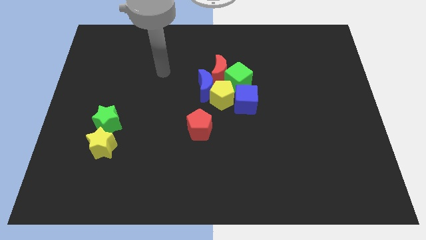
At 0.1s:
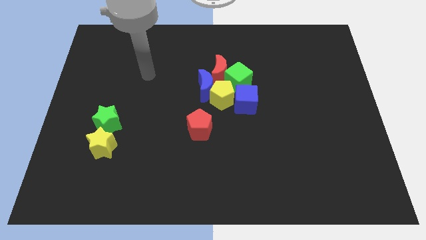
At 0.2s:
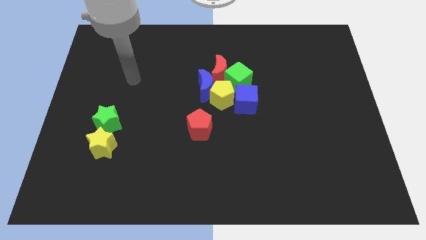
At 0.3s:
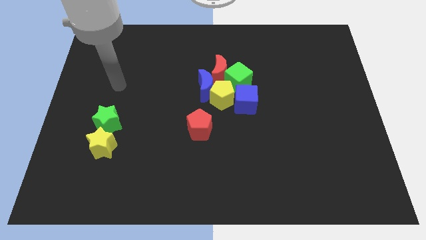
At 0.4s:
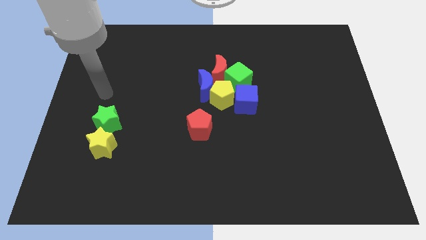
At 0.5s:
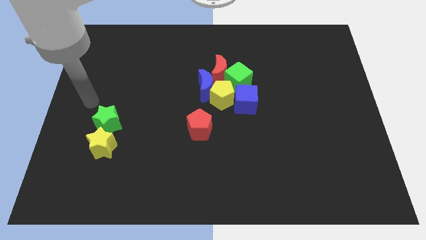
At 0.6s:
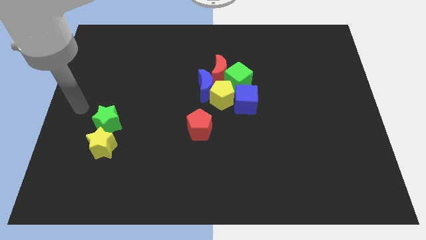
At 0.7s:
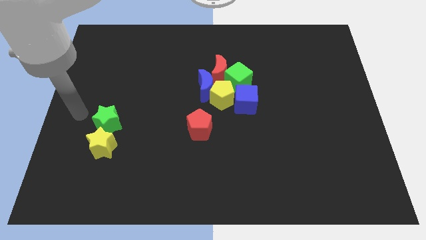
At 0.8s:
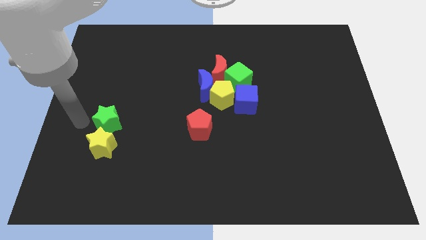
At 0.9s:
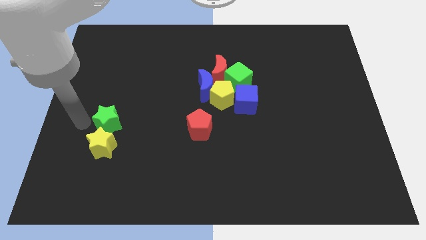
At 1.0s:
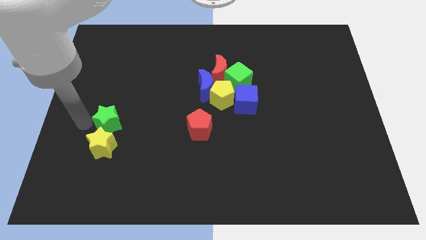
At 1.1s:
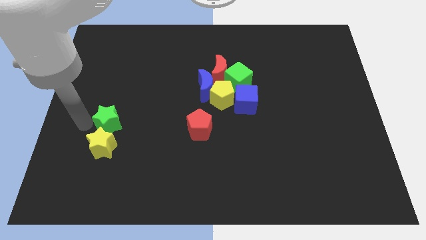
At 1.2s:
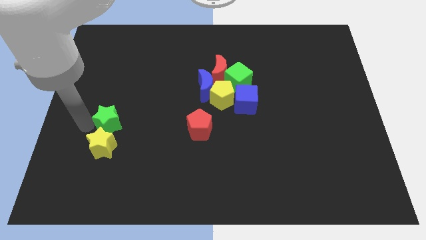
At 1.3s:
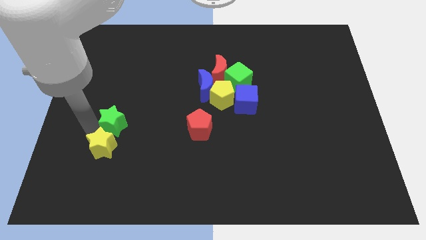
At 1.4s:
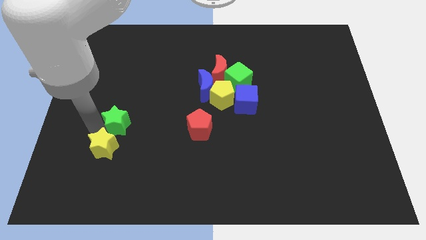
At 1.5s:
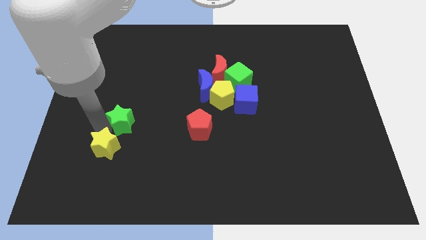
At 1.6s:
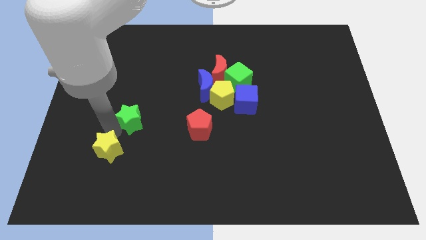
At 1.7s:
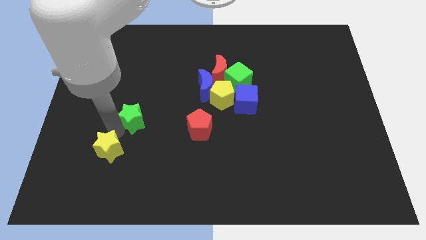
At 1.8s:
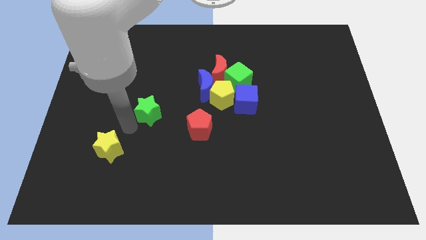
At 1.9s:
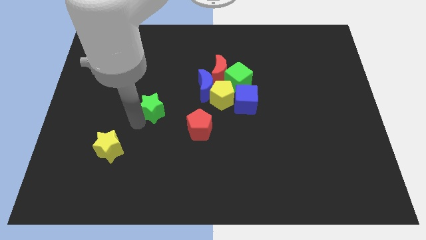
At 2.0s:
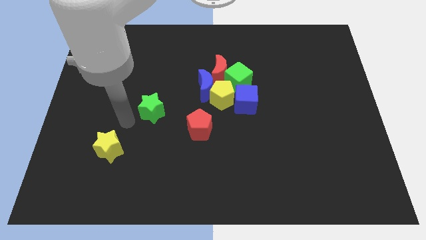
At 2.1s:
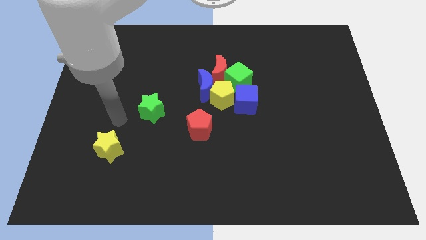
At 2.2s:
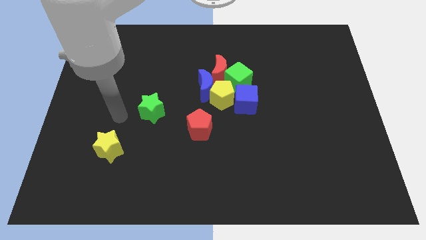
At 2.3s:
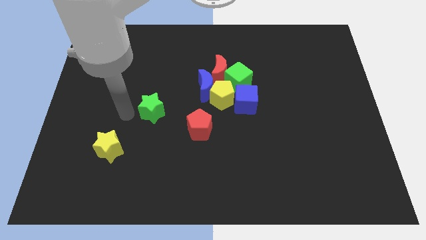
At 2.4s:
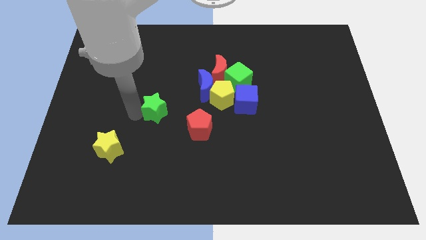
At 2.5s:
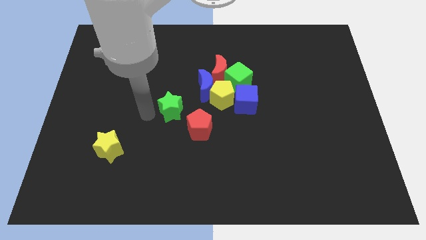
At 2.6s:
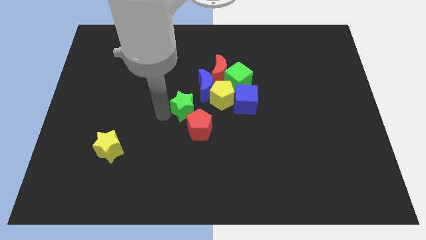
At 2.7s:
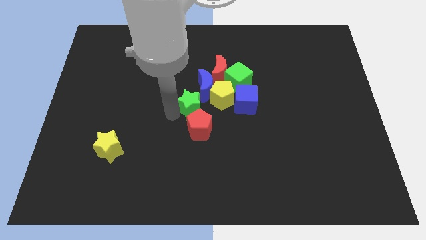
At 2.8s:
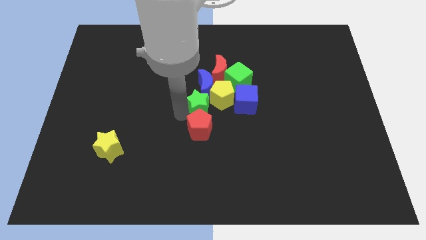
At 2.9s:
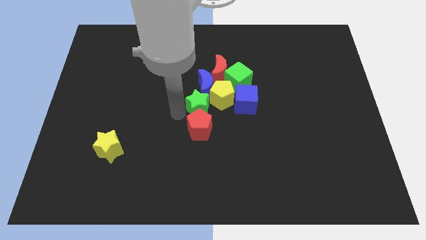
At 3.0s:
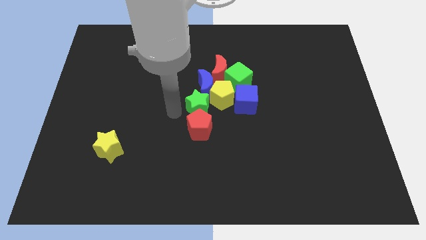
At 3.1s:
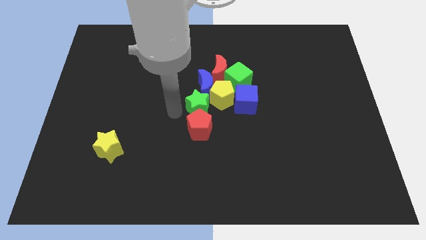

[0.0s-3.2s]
put the green star above the red pentagon

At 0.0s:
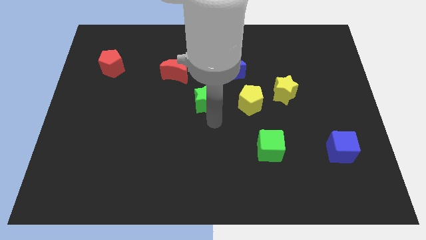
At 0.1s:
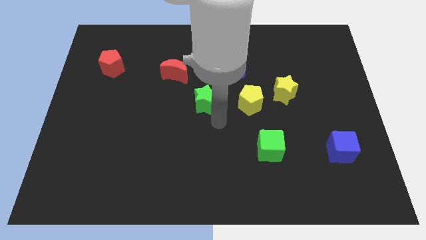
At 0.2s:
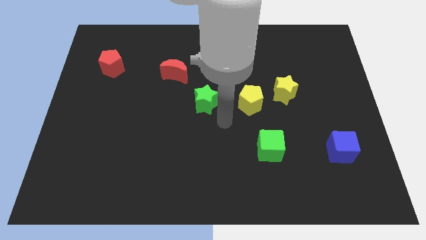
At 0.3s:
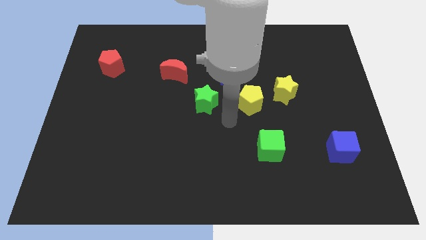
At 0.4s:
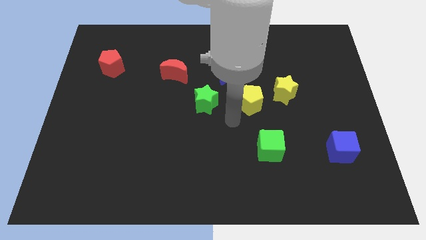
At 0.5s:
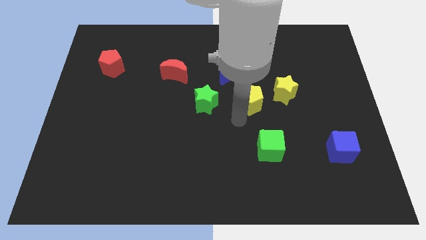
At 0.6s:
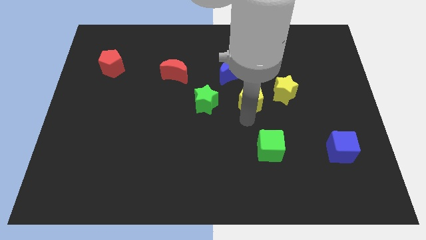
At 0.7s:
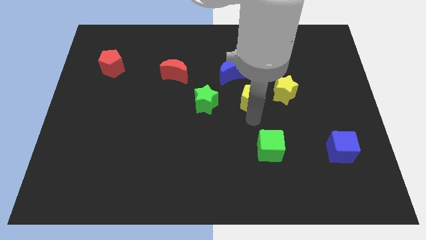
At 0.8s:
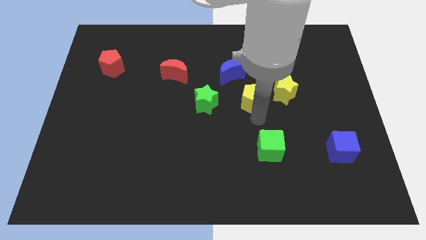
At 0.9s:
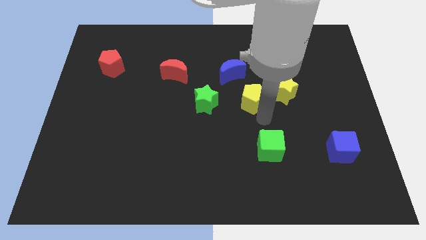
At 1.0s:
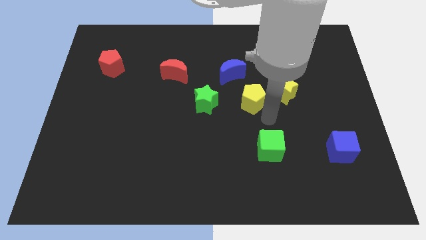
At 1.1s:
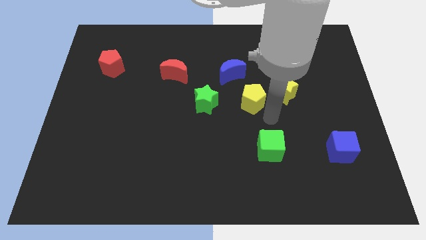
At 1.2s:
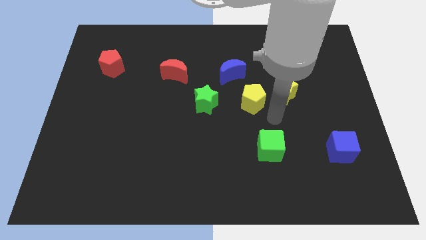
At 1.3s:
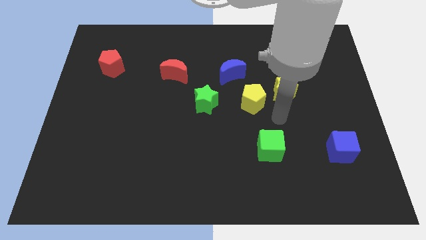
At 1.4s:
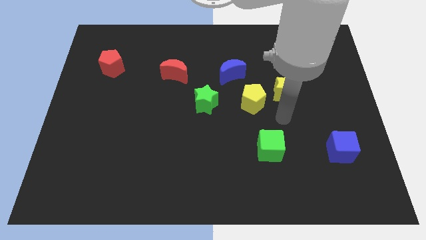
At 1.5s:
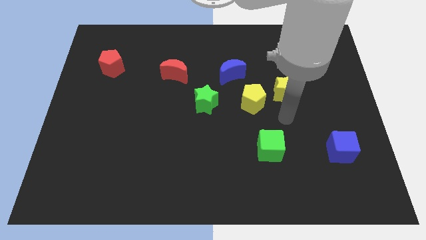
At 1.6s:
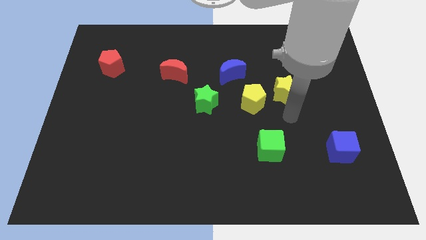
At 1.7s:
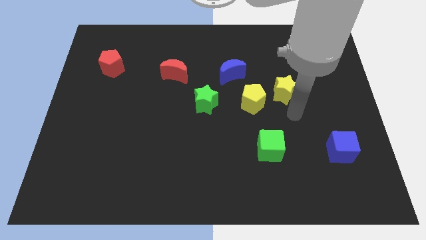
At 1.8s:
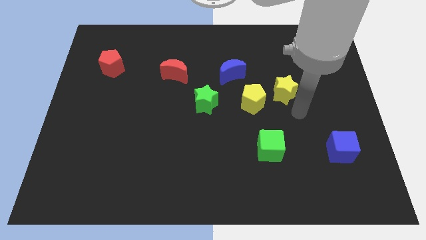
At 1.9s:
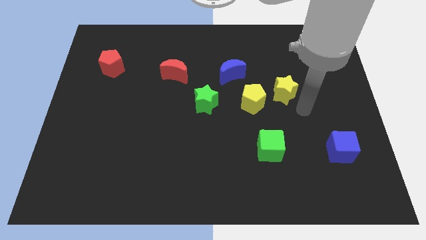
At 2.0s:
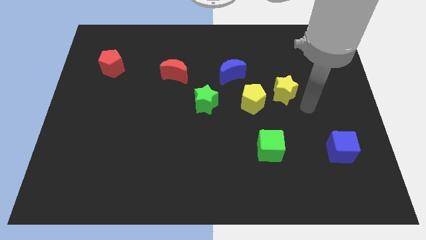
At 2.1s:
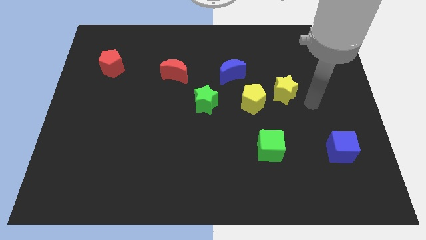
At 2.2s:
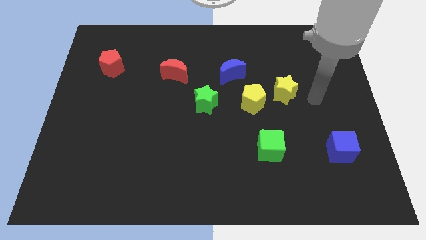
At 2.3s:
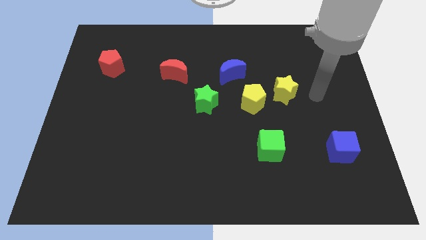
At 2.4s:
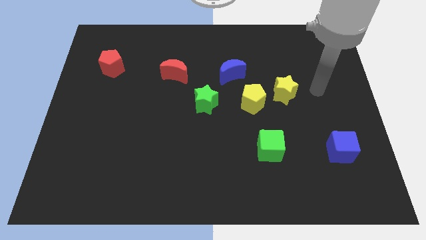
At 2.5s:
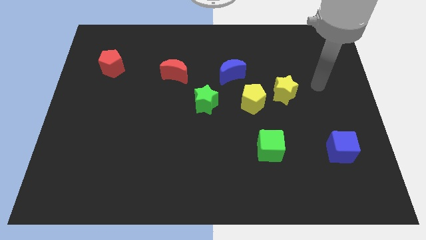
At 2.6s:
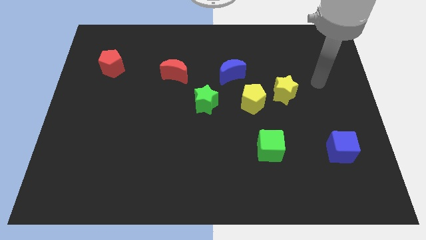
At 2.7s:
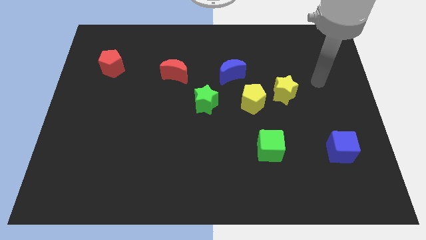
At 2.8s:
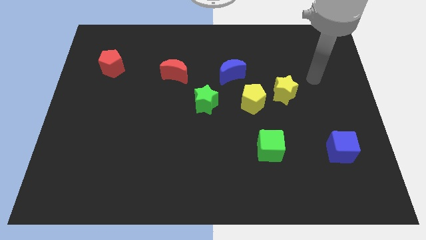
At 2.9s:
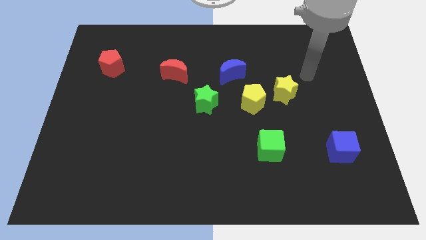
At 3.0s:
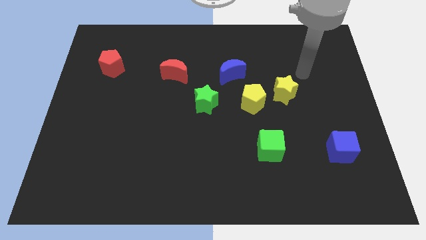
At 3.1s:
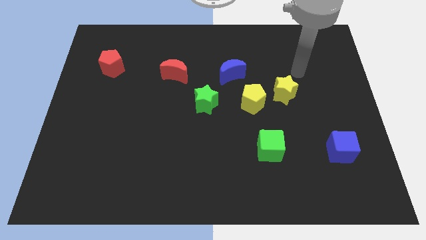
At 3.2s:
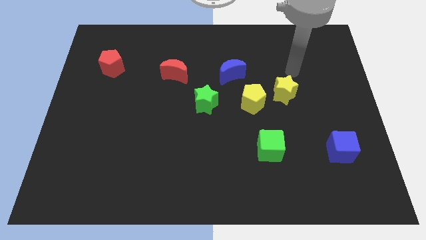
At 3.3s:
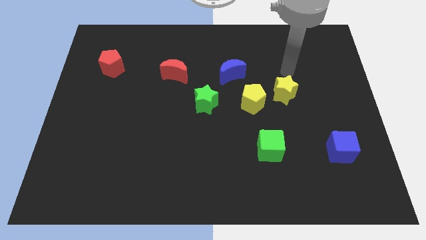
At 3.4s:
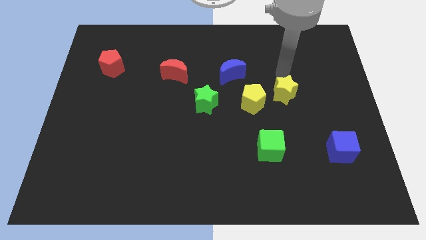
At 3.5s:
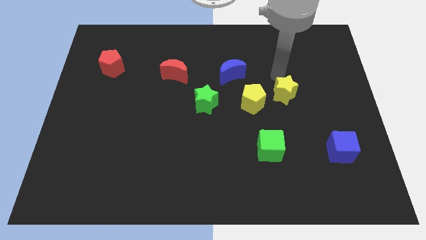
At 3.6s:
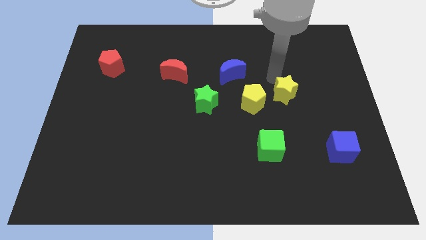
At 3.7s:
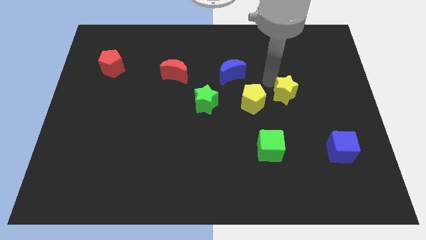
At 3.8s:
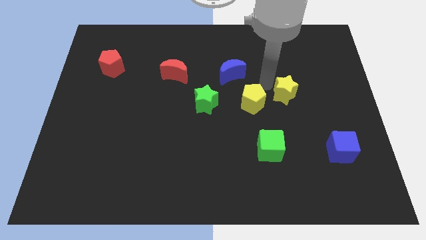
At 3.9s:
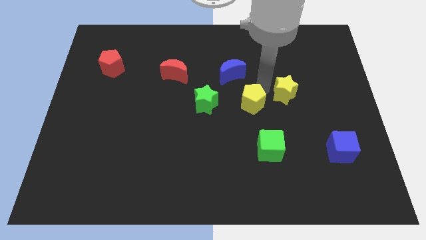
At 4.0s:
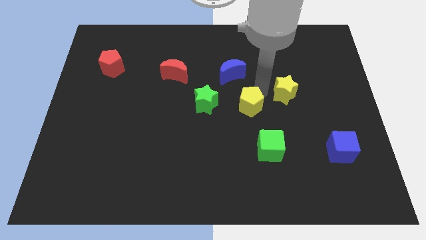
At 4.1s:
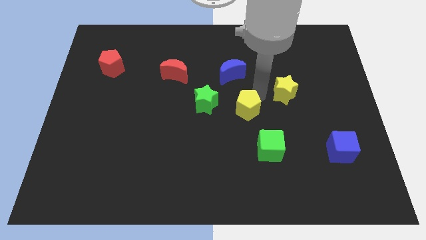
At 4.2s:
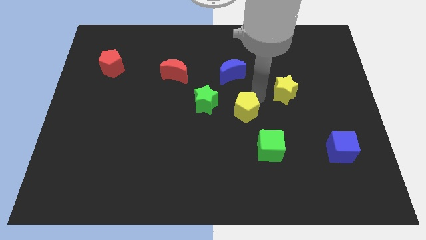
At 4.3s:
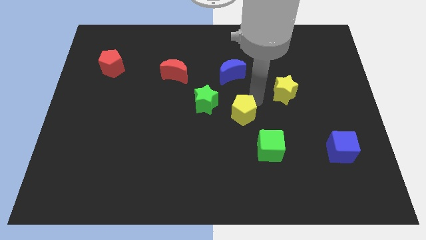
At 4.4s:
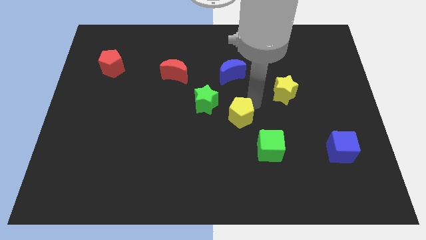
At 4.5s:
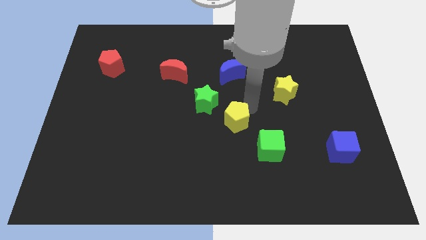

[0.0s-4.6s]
slide the yellow pentagon diagonally in between the green star and green cube

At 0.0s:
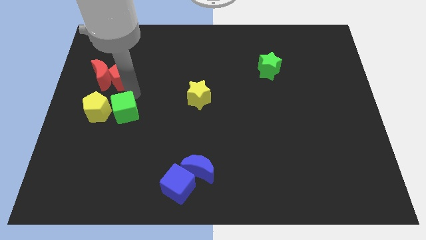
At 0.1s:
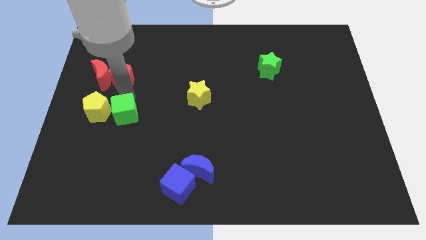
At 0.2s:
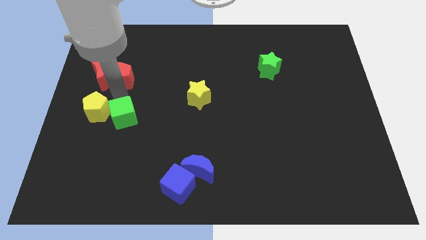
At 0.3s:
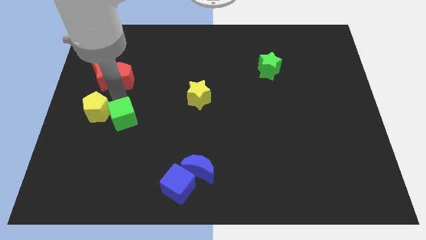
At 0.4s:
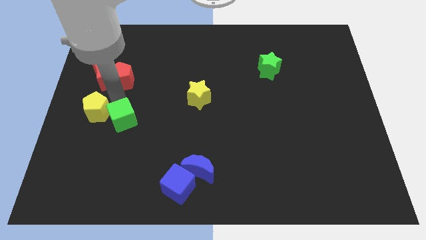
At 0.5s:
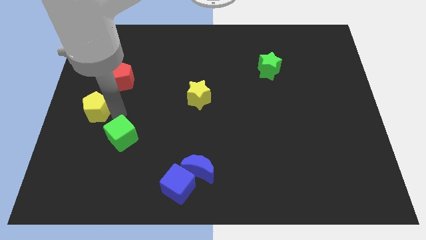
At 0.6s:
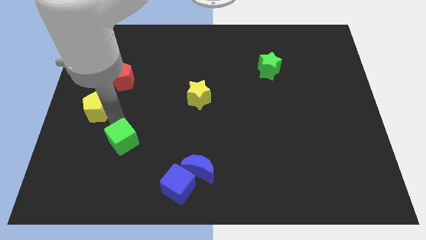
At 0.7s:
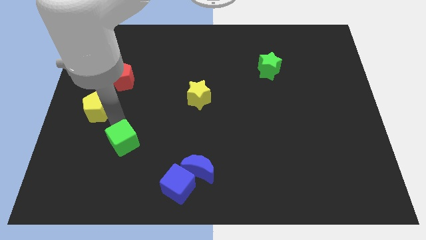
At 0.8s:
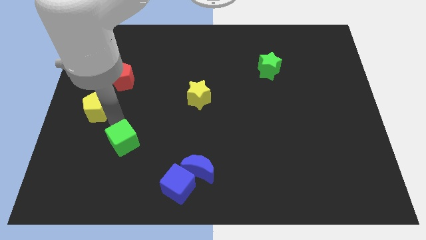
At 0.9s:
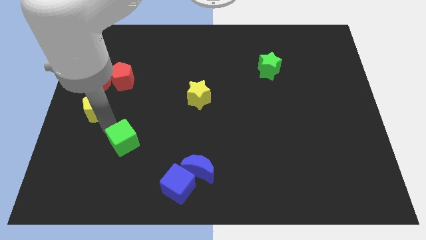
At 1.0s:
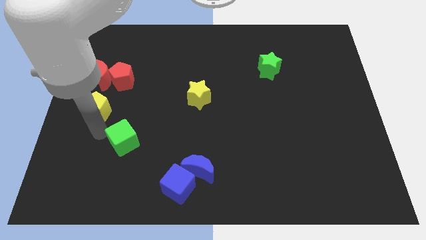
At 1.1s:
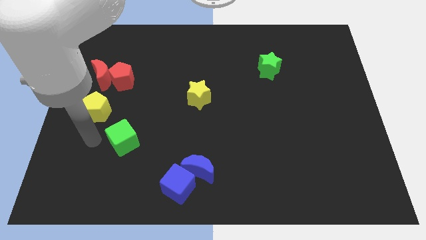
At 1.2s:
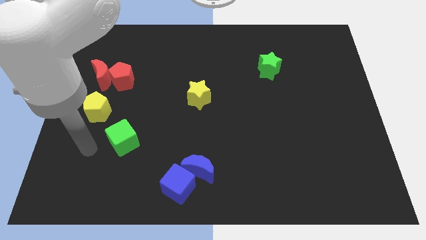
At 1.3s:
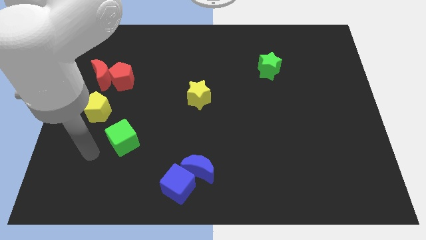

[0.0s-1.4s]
drag the green cube slightly downwards
